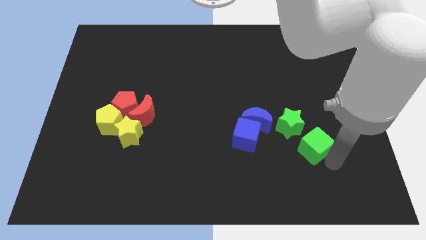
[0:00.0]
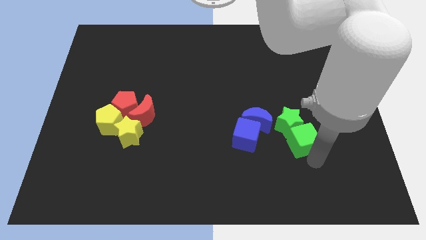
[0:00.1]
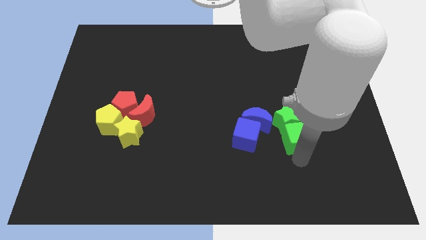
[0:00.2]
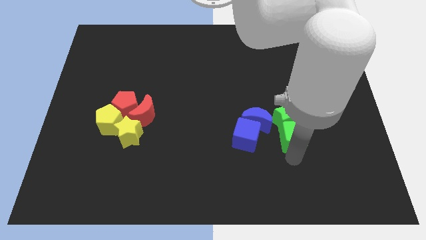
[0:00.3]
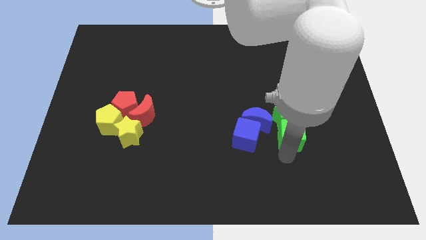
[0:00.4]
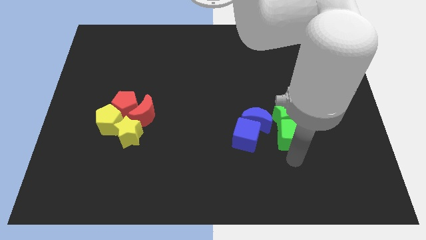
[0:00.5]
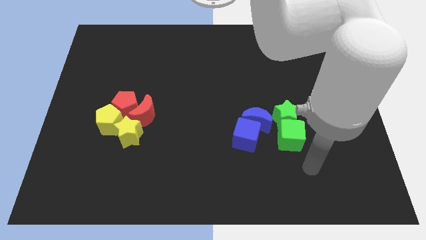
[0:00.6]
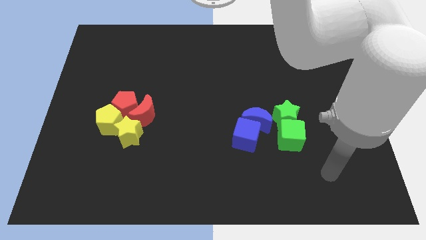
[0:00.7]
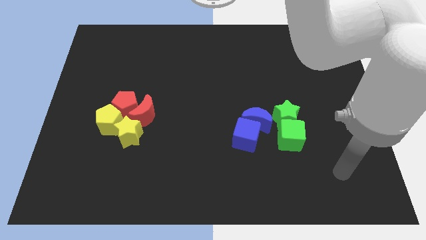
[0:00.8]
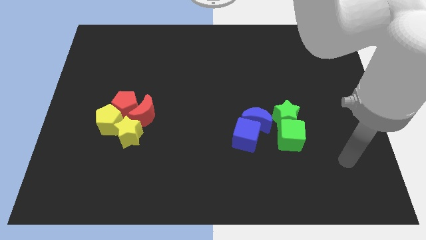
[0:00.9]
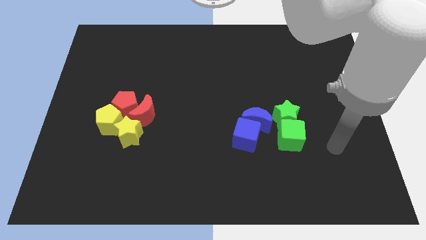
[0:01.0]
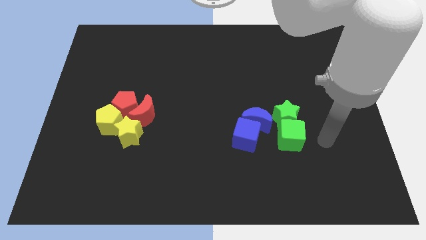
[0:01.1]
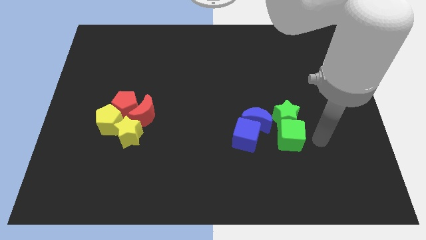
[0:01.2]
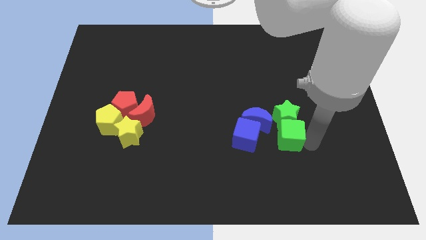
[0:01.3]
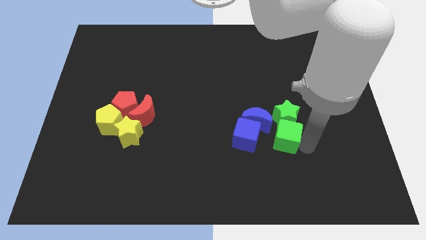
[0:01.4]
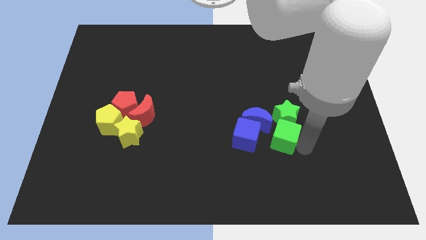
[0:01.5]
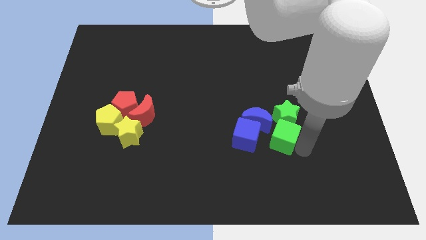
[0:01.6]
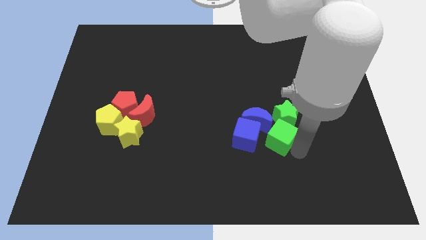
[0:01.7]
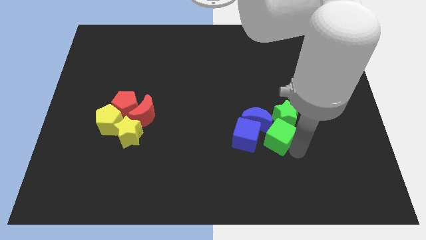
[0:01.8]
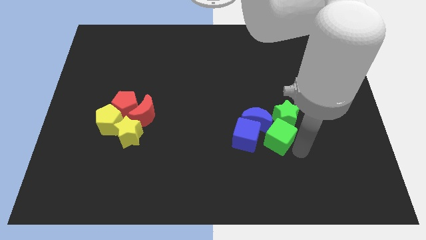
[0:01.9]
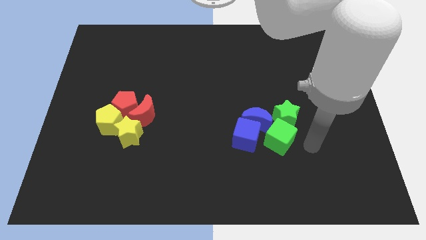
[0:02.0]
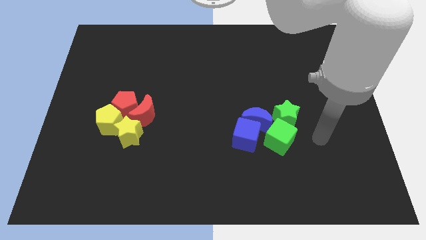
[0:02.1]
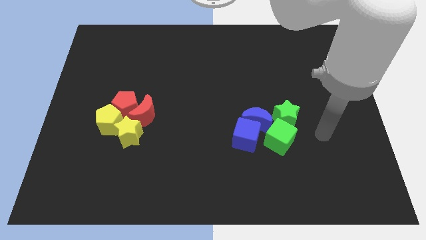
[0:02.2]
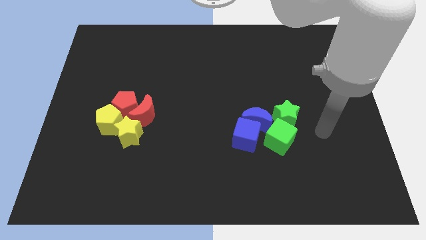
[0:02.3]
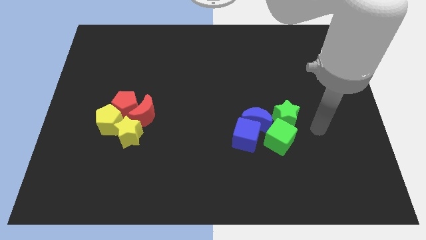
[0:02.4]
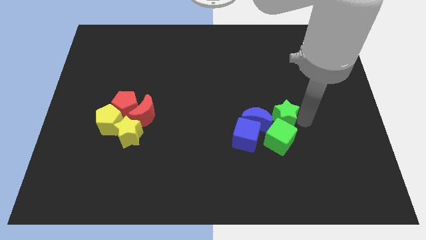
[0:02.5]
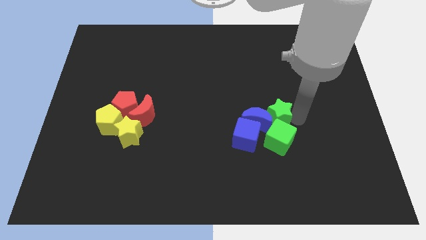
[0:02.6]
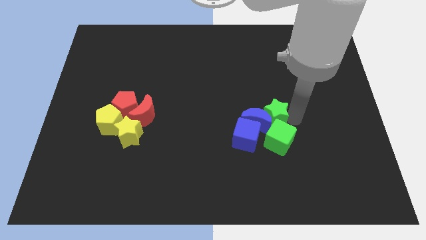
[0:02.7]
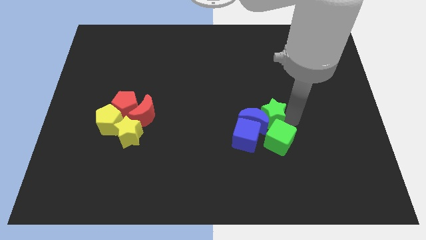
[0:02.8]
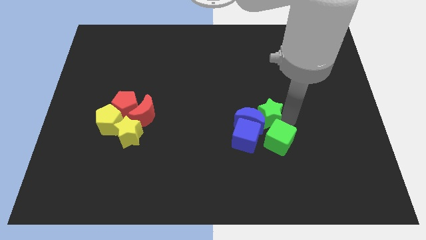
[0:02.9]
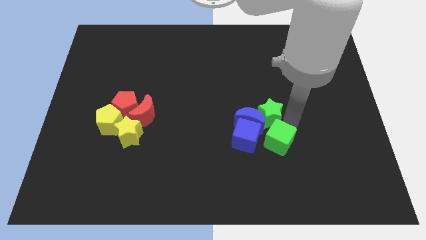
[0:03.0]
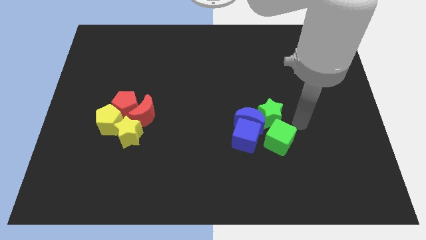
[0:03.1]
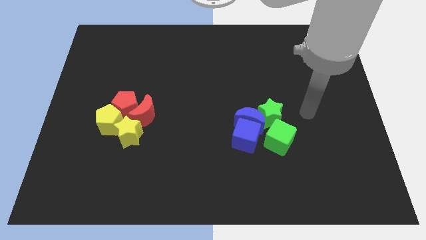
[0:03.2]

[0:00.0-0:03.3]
move the green cube into the green star

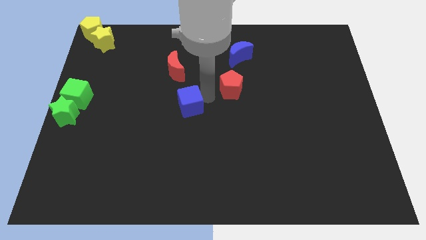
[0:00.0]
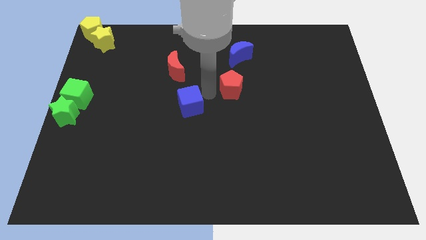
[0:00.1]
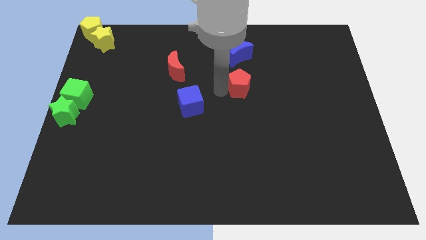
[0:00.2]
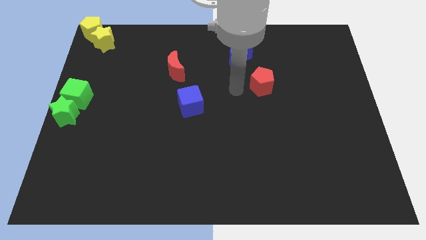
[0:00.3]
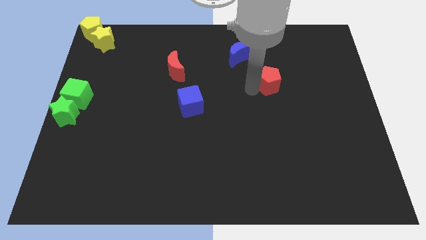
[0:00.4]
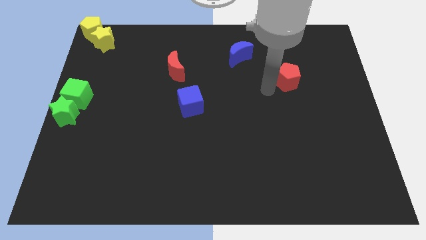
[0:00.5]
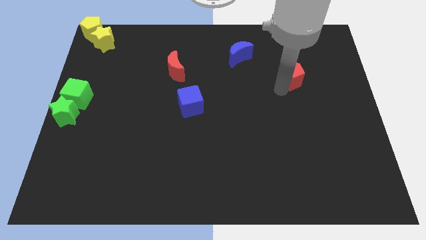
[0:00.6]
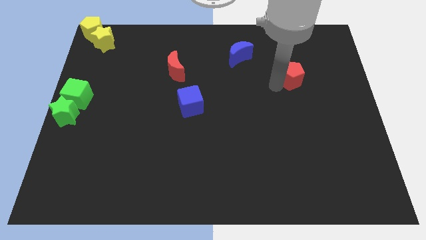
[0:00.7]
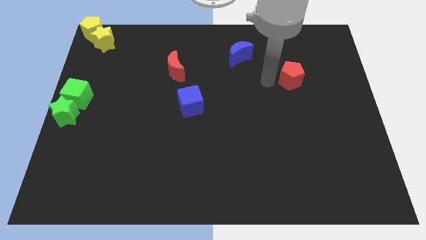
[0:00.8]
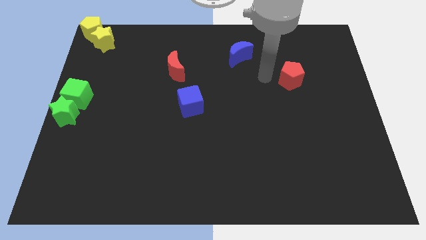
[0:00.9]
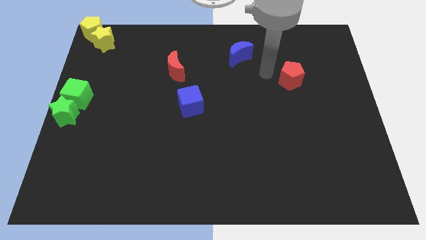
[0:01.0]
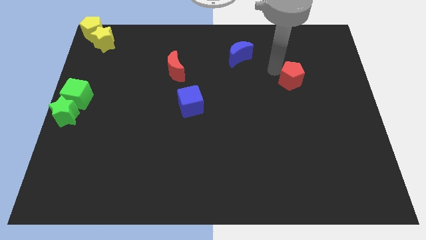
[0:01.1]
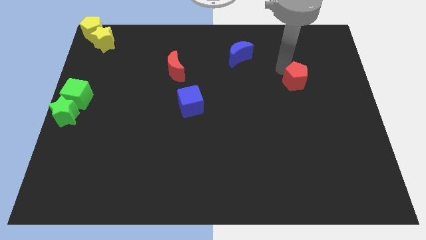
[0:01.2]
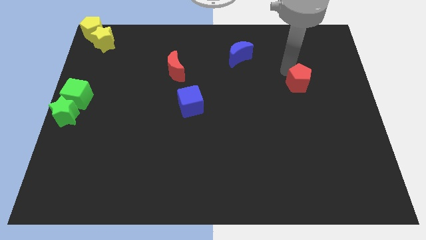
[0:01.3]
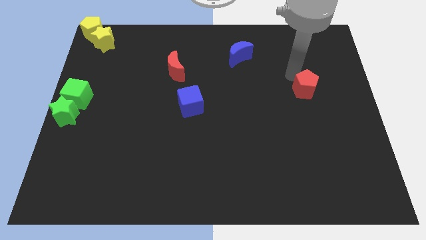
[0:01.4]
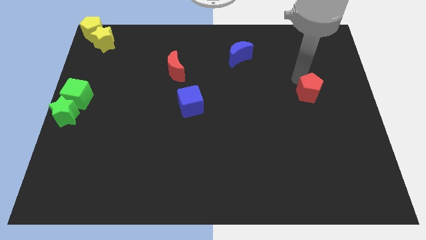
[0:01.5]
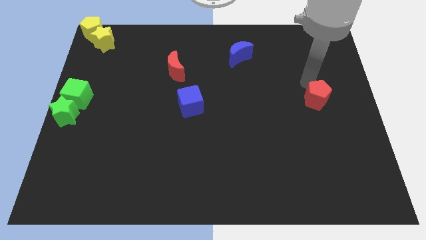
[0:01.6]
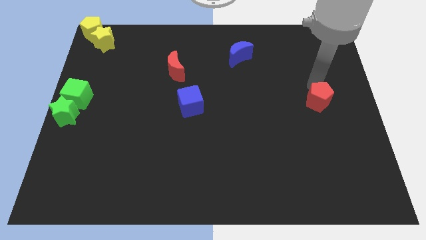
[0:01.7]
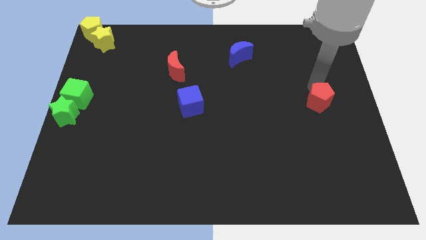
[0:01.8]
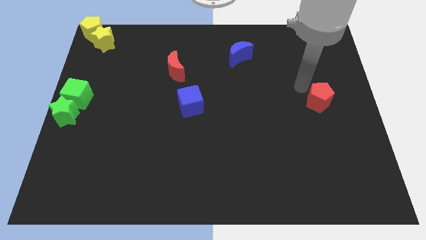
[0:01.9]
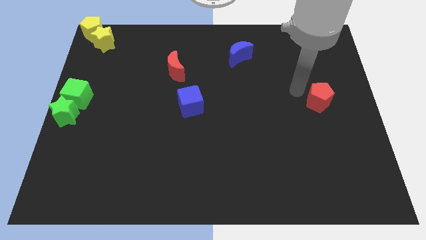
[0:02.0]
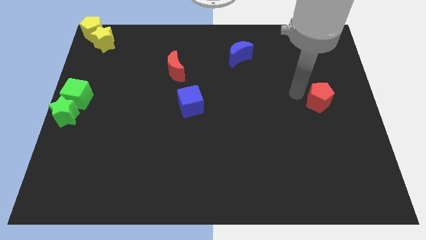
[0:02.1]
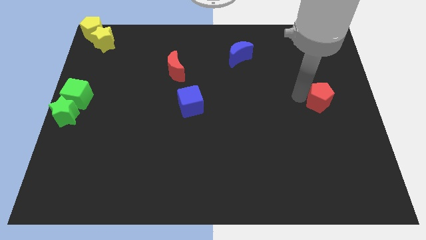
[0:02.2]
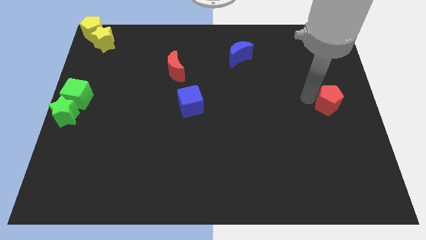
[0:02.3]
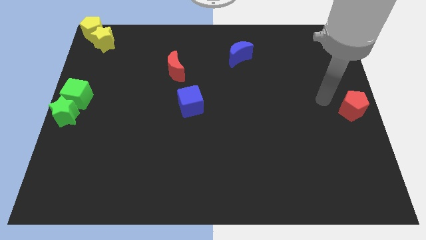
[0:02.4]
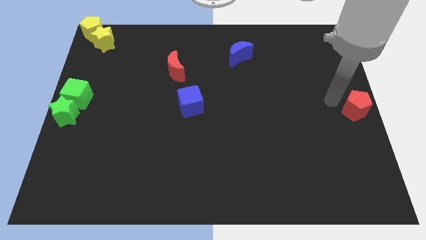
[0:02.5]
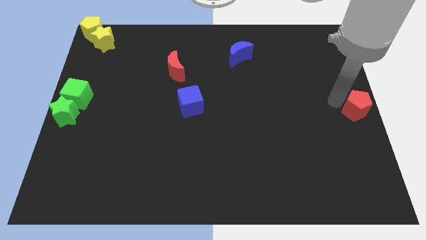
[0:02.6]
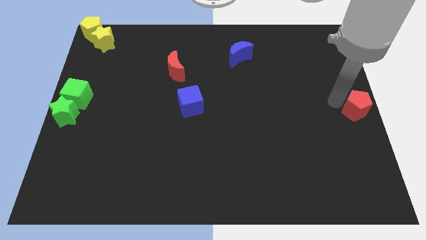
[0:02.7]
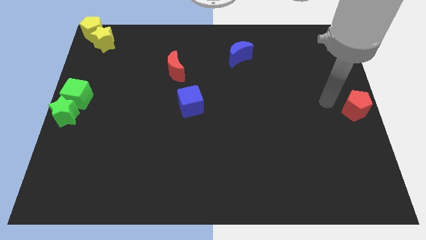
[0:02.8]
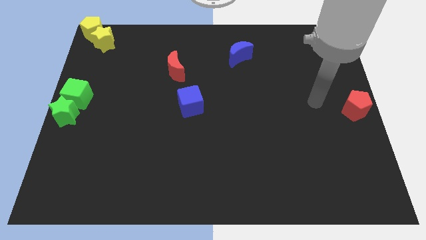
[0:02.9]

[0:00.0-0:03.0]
move the red pentagon to the middle right of the board

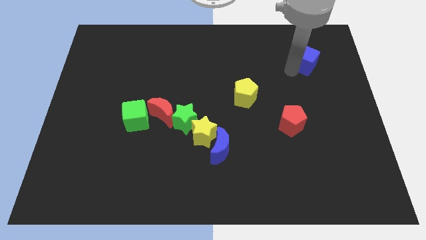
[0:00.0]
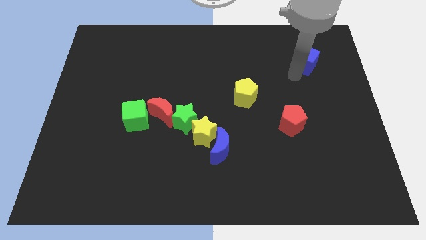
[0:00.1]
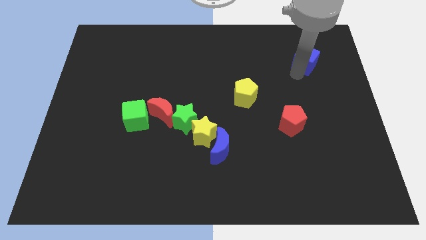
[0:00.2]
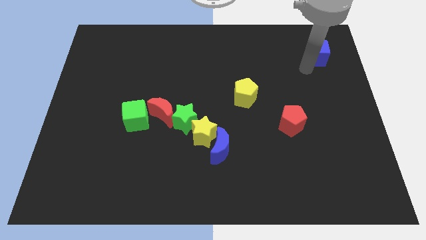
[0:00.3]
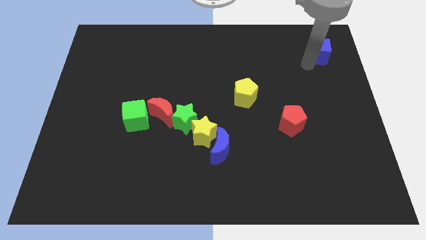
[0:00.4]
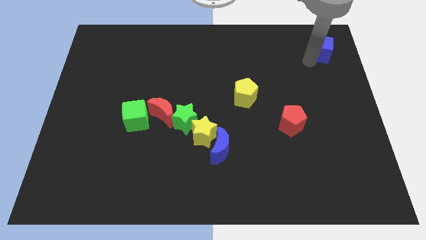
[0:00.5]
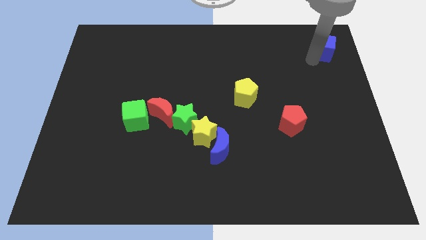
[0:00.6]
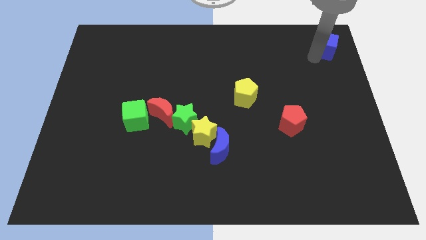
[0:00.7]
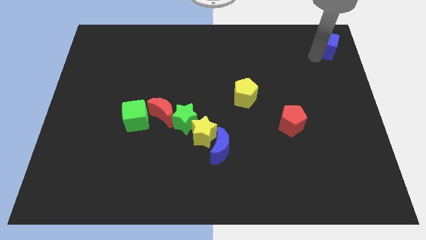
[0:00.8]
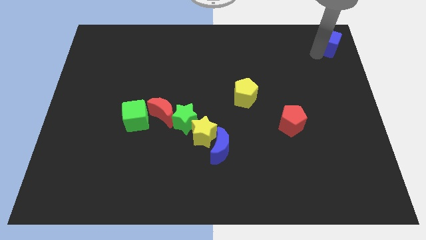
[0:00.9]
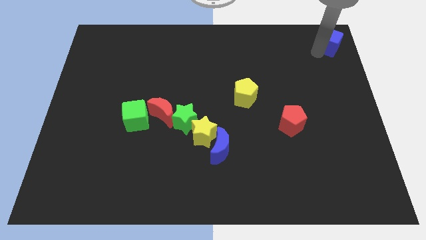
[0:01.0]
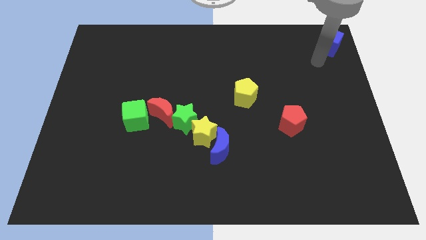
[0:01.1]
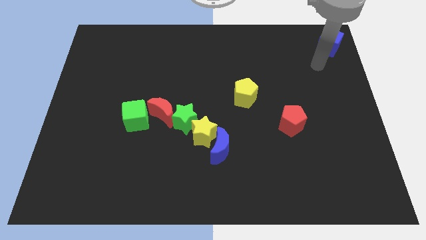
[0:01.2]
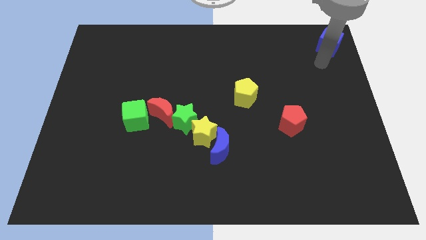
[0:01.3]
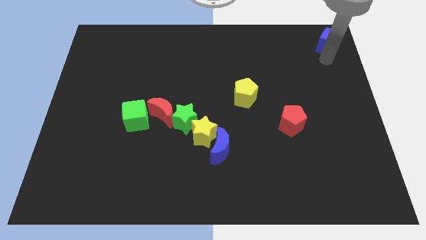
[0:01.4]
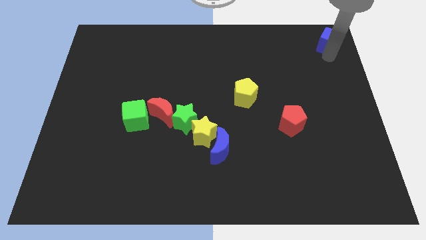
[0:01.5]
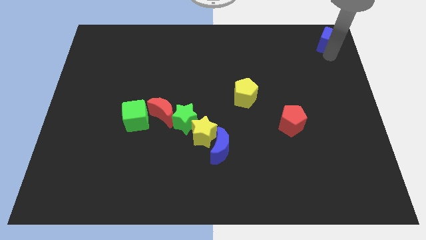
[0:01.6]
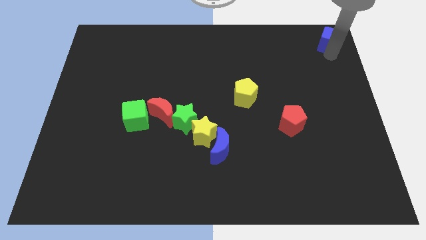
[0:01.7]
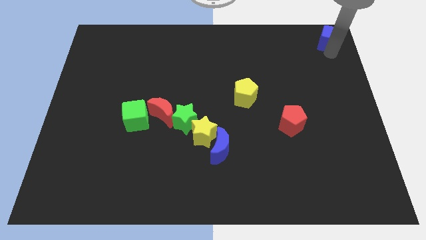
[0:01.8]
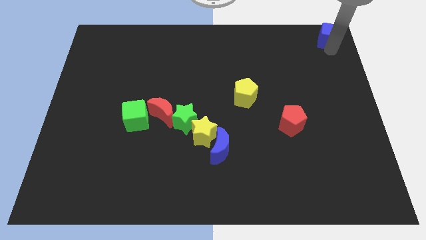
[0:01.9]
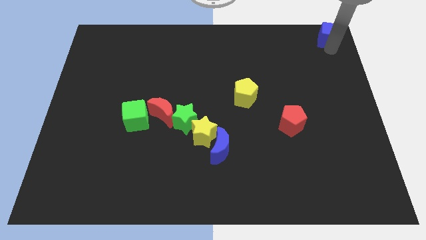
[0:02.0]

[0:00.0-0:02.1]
place the blue cube at the top right corner of the board

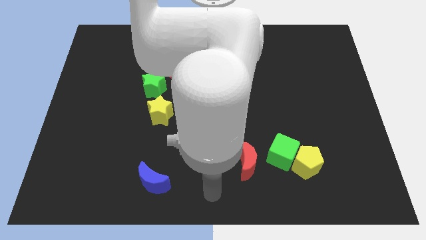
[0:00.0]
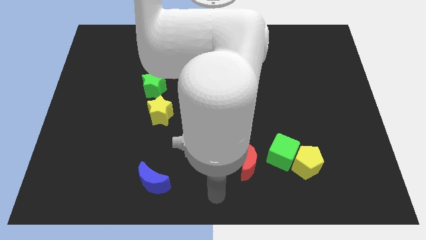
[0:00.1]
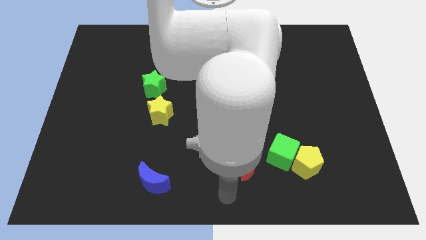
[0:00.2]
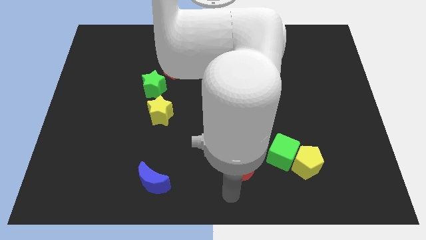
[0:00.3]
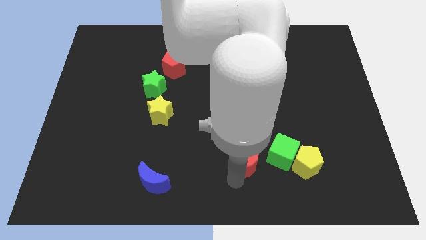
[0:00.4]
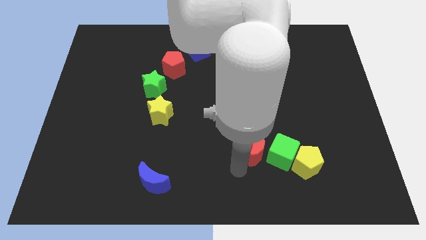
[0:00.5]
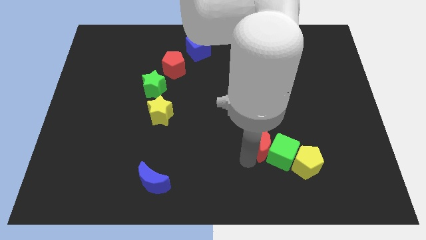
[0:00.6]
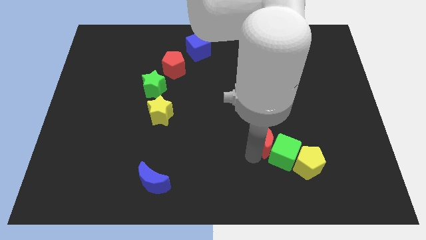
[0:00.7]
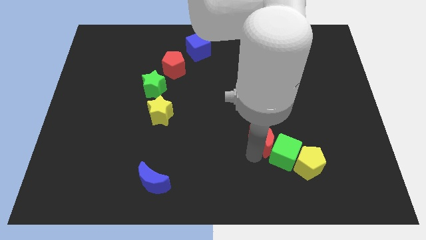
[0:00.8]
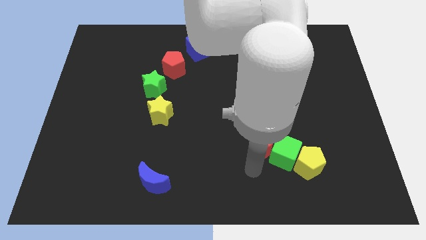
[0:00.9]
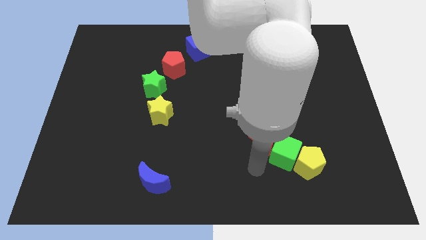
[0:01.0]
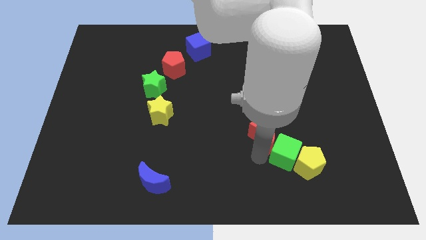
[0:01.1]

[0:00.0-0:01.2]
make the red crescent to touch the left side of the green cube
